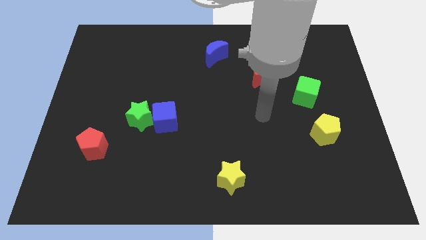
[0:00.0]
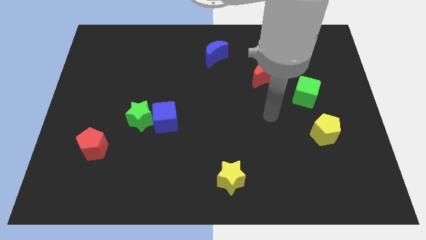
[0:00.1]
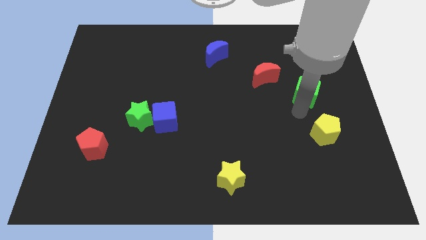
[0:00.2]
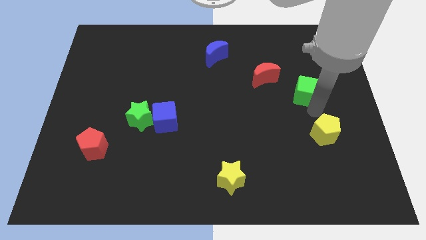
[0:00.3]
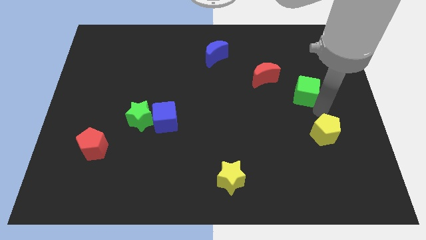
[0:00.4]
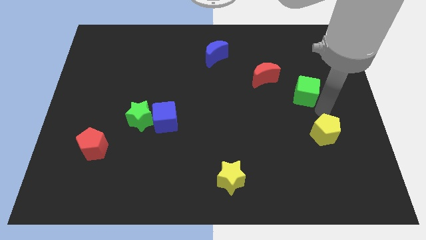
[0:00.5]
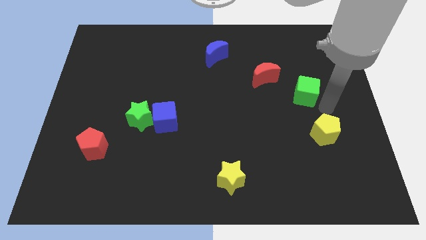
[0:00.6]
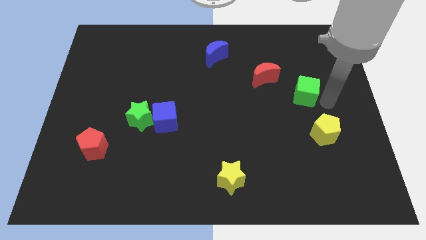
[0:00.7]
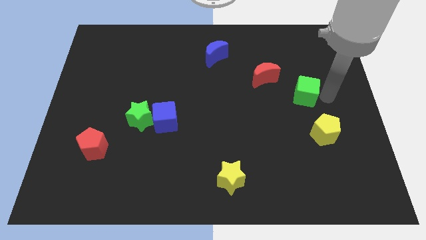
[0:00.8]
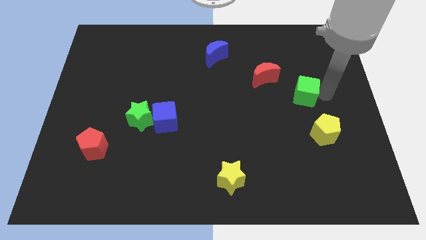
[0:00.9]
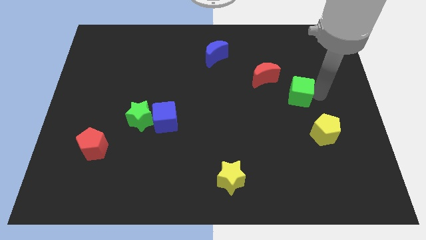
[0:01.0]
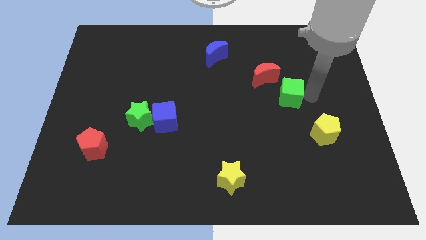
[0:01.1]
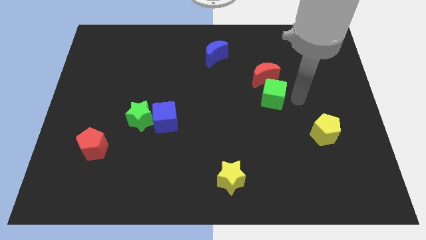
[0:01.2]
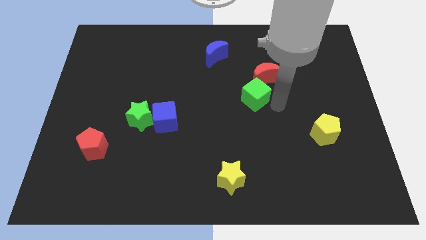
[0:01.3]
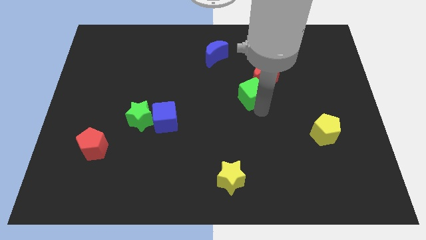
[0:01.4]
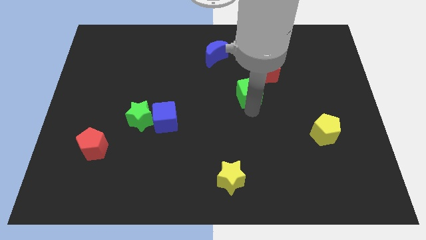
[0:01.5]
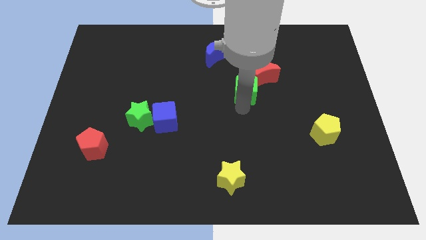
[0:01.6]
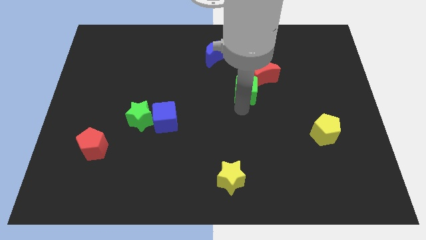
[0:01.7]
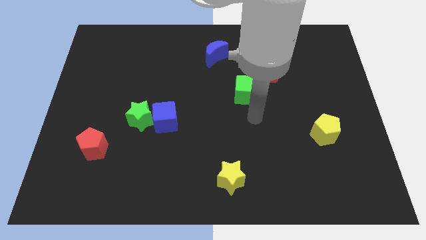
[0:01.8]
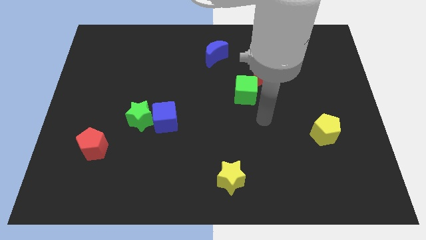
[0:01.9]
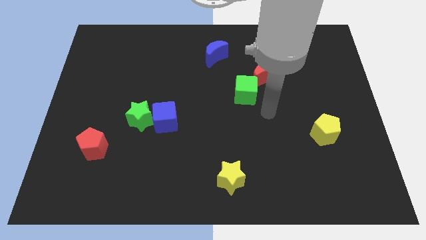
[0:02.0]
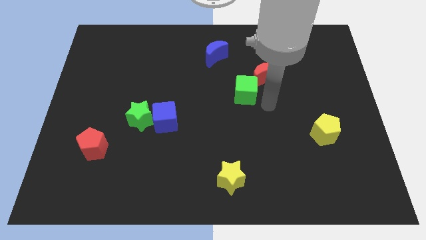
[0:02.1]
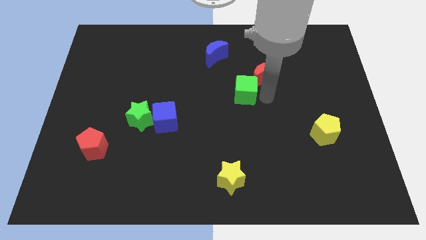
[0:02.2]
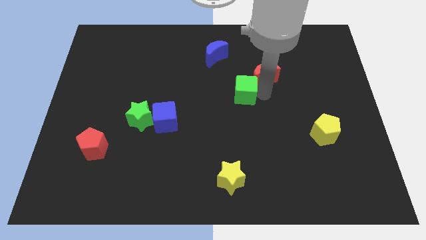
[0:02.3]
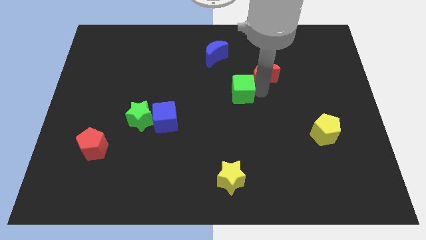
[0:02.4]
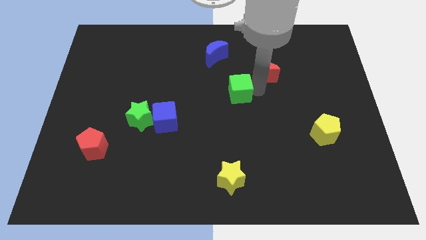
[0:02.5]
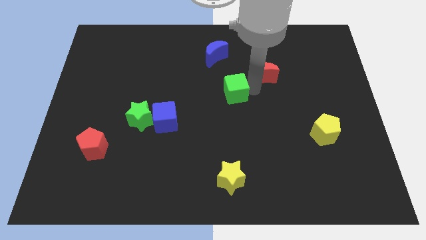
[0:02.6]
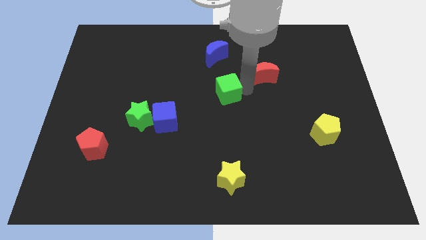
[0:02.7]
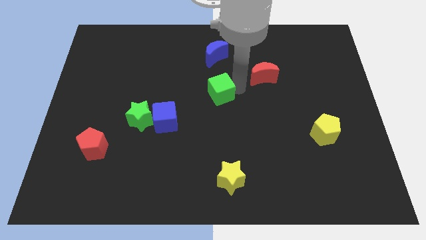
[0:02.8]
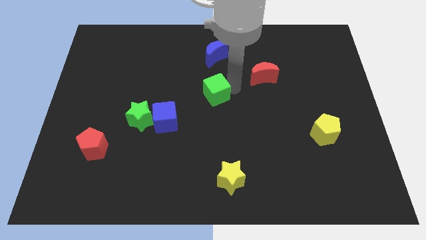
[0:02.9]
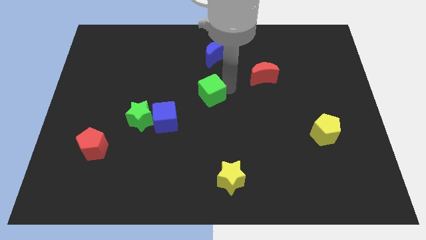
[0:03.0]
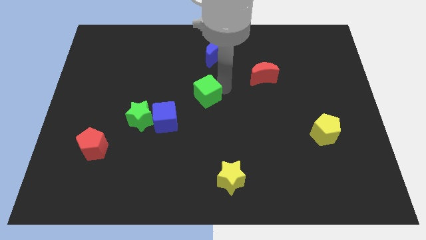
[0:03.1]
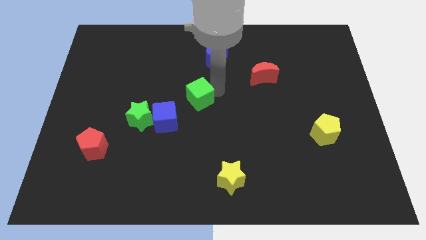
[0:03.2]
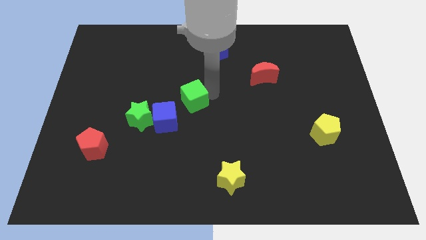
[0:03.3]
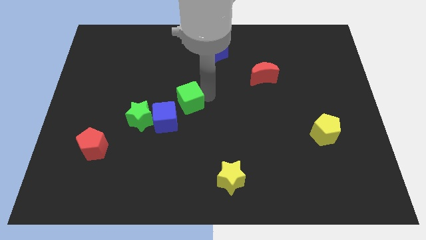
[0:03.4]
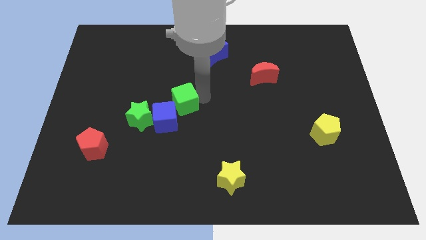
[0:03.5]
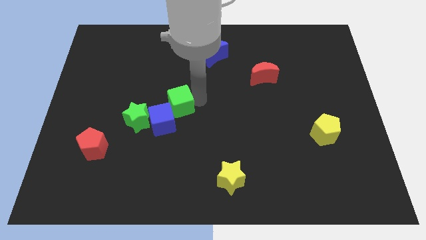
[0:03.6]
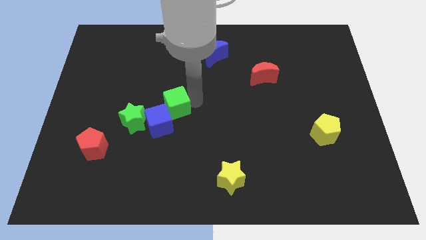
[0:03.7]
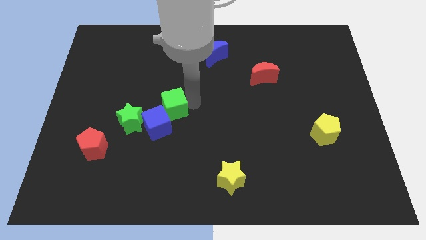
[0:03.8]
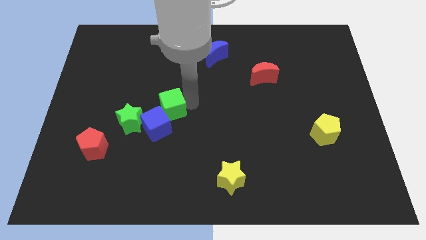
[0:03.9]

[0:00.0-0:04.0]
slide the green cube close to the blue cube

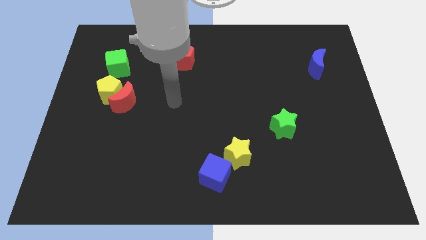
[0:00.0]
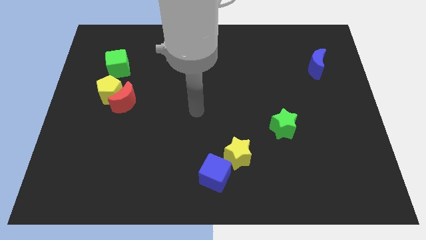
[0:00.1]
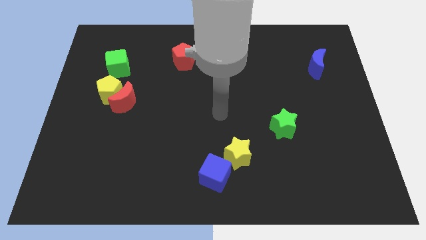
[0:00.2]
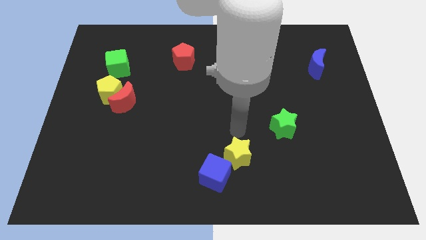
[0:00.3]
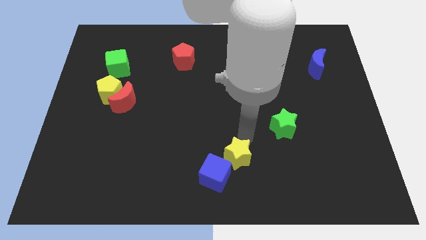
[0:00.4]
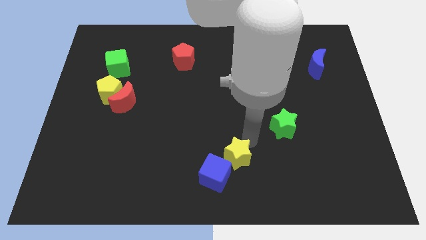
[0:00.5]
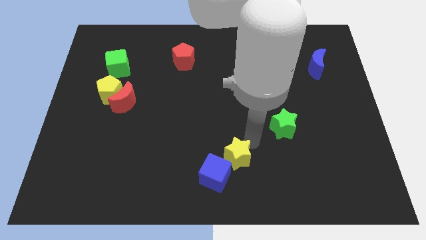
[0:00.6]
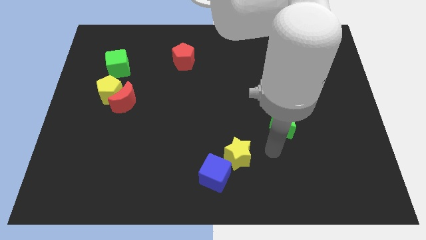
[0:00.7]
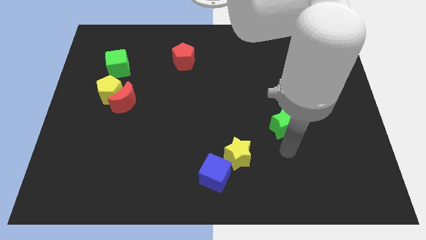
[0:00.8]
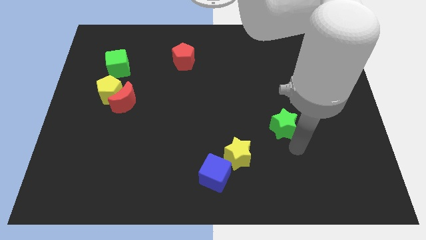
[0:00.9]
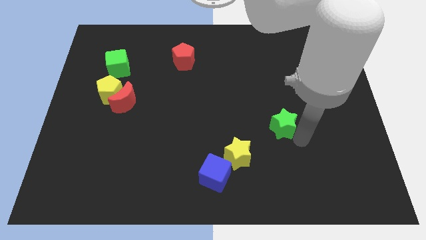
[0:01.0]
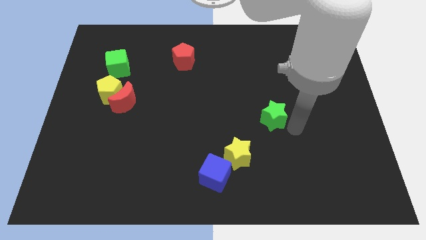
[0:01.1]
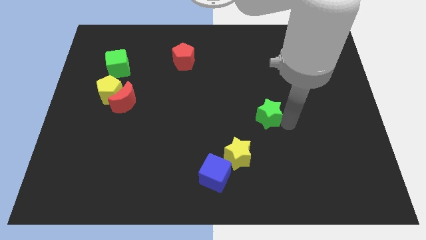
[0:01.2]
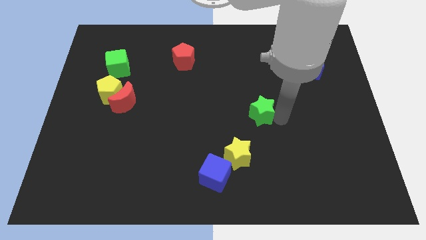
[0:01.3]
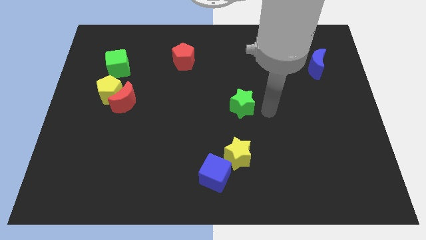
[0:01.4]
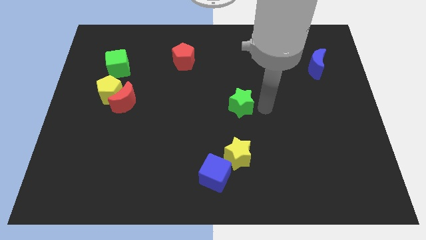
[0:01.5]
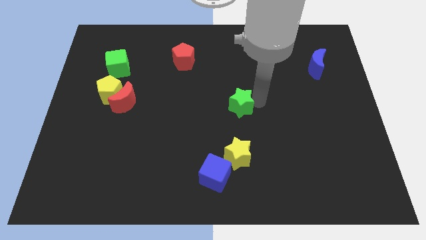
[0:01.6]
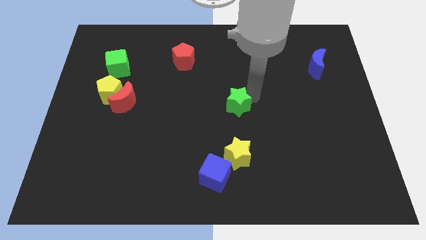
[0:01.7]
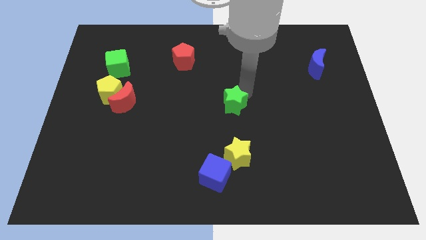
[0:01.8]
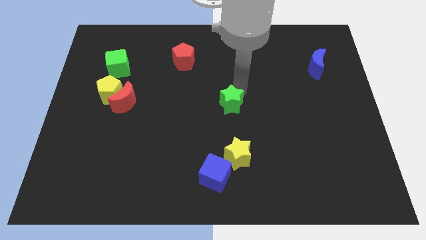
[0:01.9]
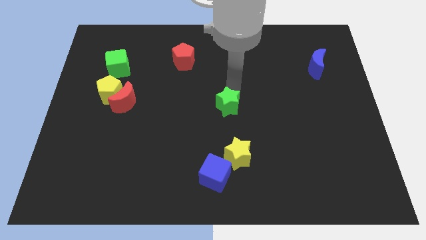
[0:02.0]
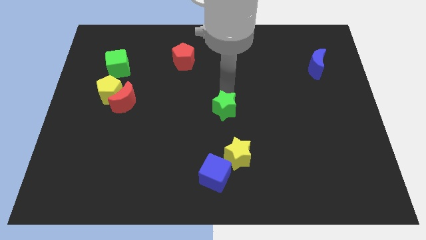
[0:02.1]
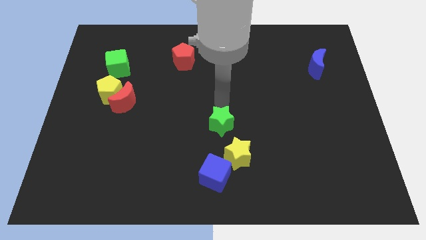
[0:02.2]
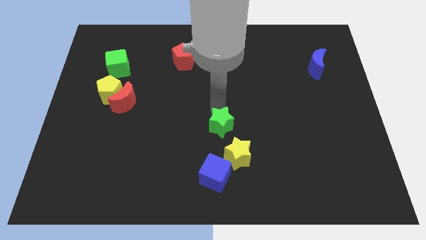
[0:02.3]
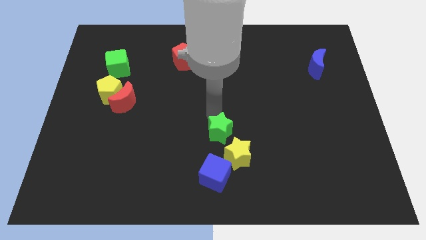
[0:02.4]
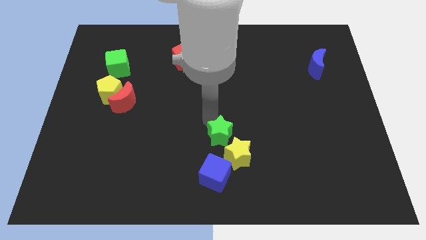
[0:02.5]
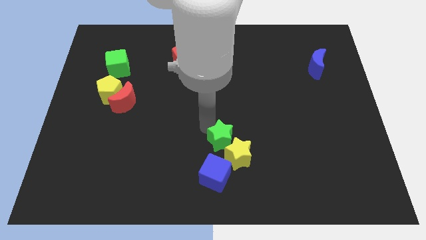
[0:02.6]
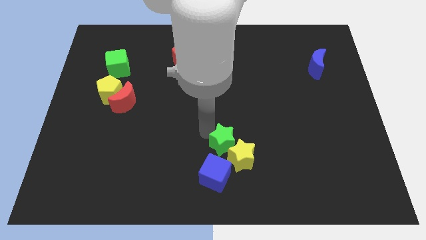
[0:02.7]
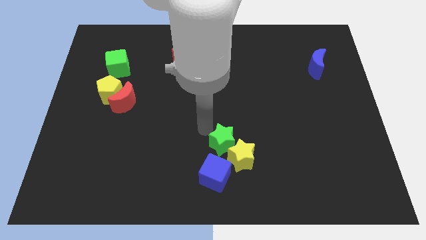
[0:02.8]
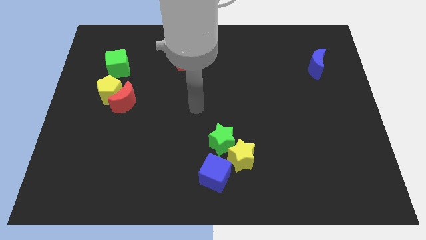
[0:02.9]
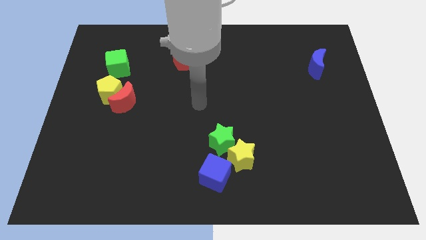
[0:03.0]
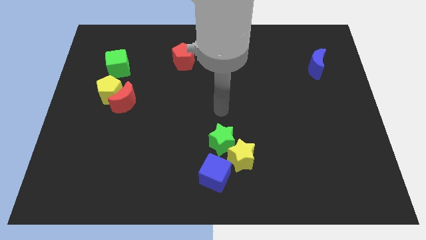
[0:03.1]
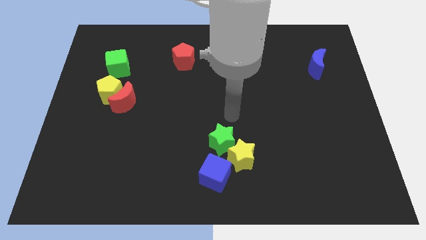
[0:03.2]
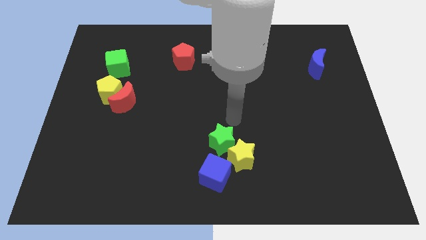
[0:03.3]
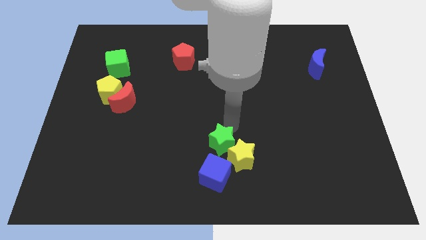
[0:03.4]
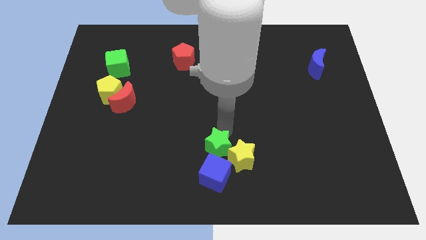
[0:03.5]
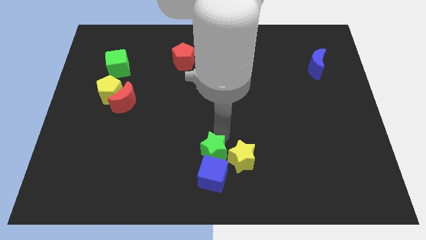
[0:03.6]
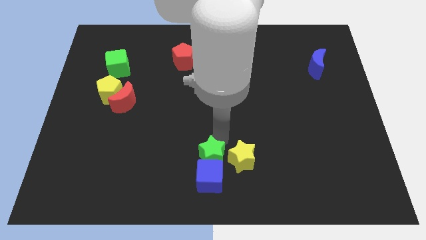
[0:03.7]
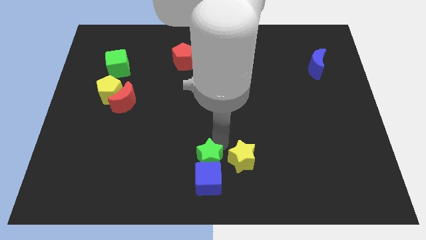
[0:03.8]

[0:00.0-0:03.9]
slide the green star close to the blue cube
